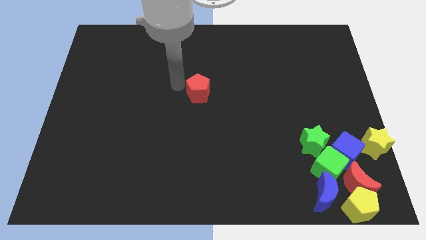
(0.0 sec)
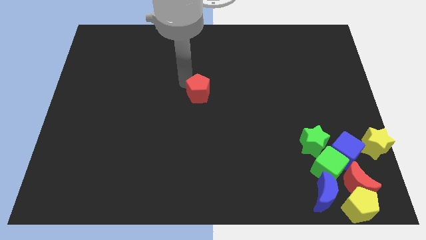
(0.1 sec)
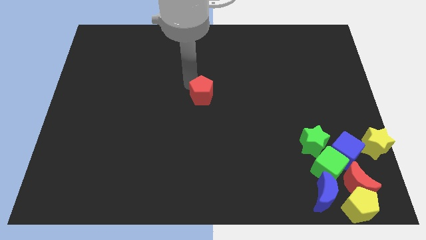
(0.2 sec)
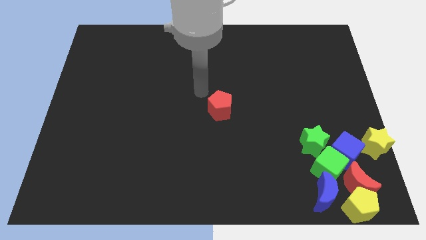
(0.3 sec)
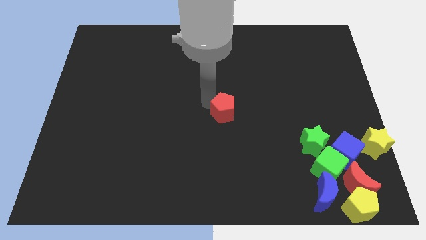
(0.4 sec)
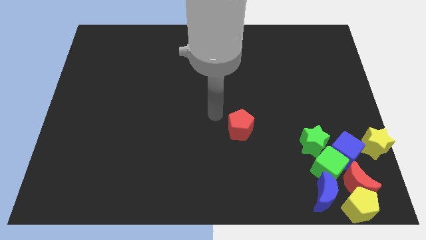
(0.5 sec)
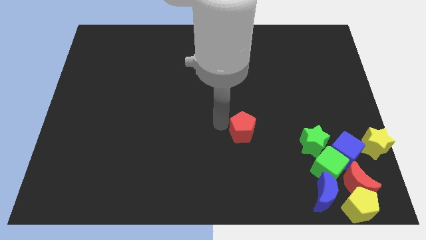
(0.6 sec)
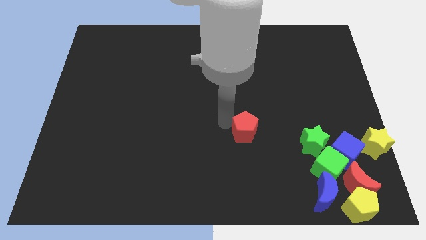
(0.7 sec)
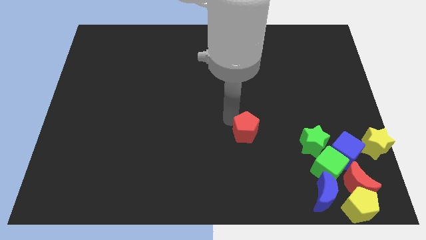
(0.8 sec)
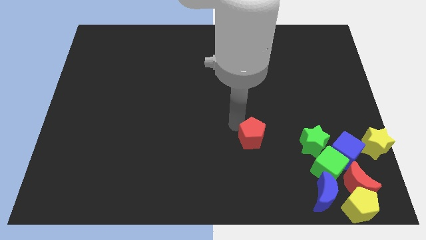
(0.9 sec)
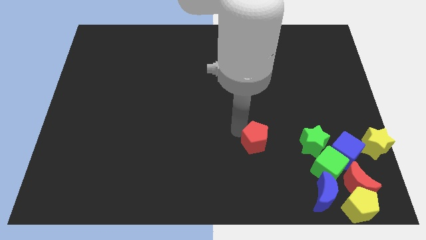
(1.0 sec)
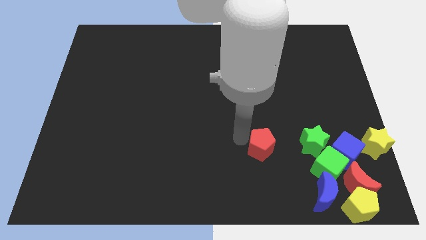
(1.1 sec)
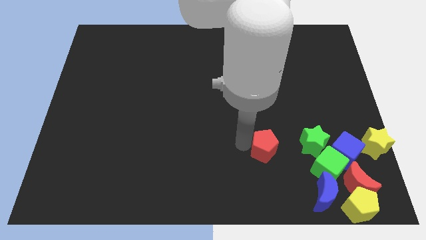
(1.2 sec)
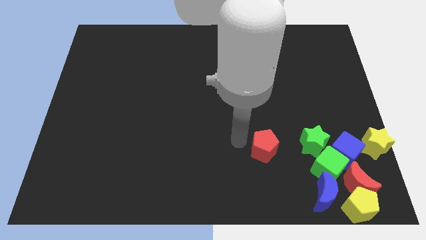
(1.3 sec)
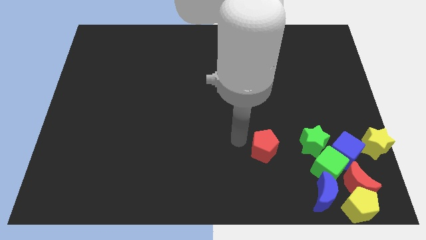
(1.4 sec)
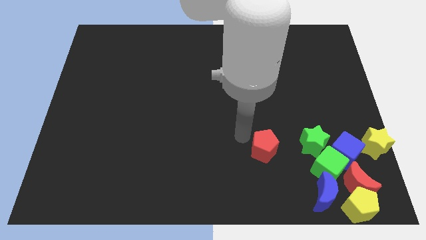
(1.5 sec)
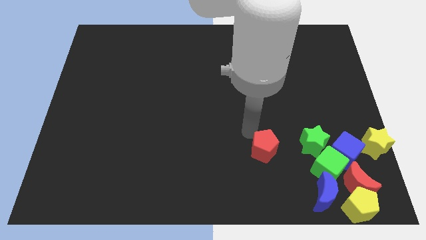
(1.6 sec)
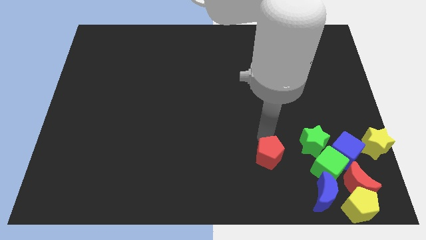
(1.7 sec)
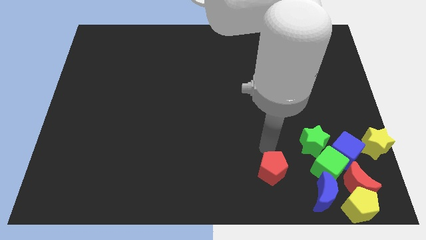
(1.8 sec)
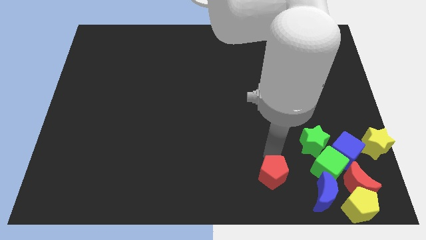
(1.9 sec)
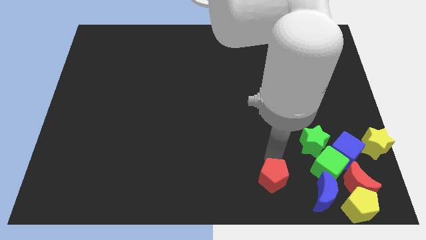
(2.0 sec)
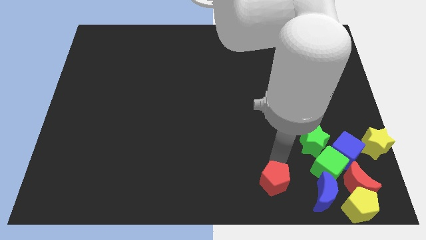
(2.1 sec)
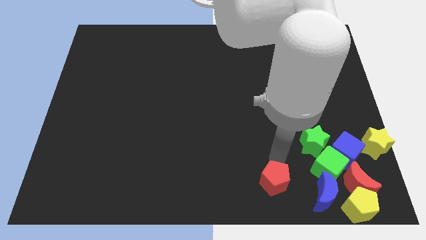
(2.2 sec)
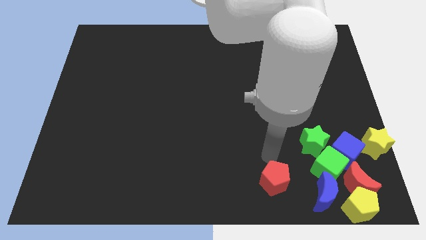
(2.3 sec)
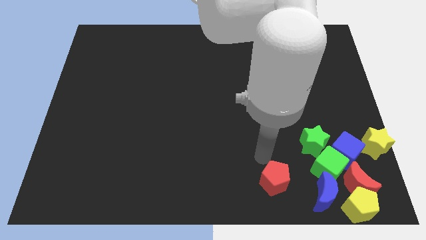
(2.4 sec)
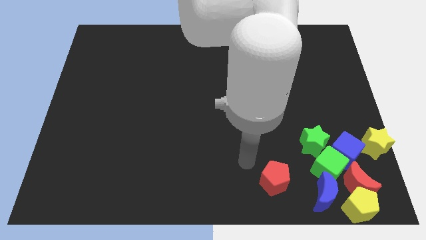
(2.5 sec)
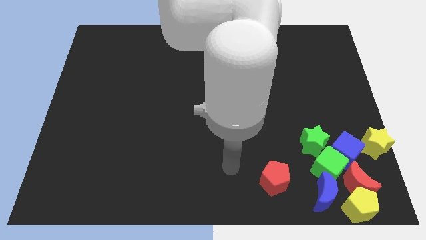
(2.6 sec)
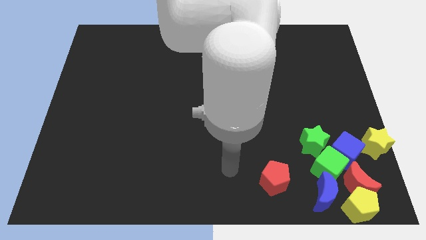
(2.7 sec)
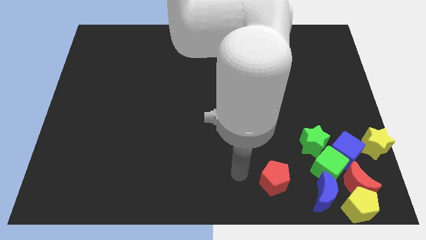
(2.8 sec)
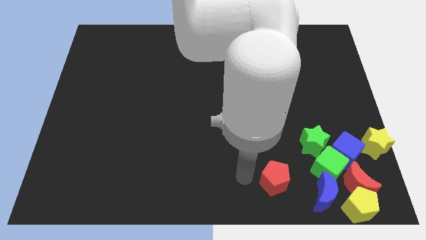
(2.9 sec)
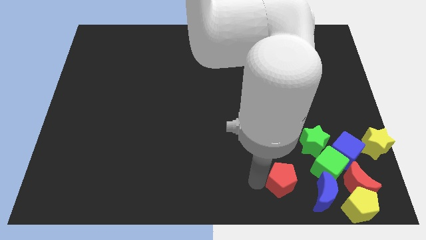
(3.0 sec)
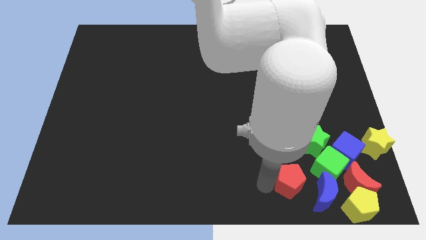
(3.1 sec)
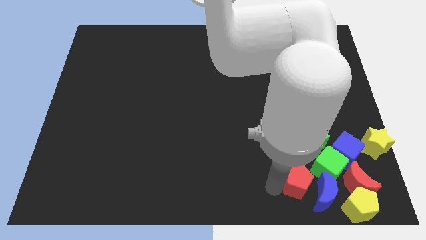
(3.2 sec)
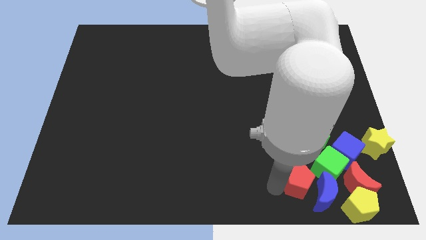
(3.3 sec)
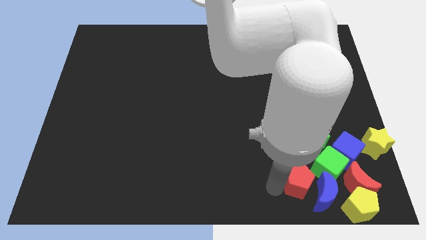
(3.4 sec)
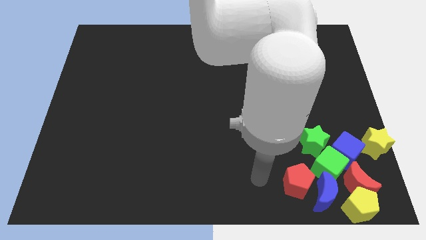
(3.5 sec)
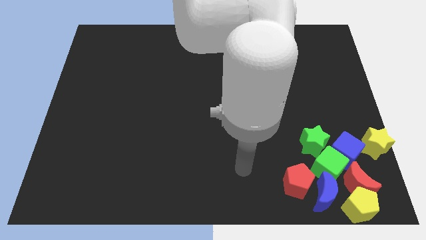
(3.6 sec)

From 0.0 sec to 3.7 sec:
move the red pentagon into the group of blocks

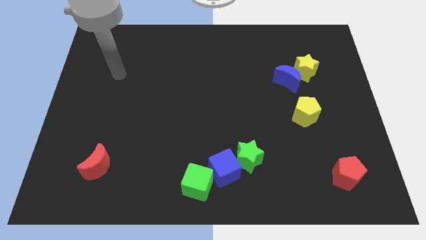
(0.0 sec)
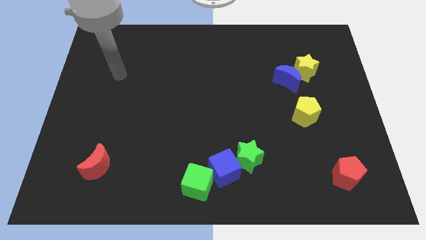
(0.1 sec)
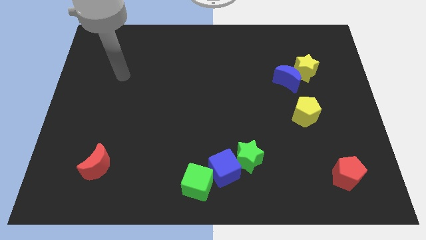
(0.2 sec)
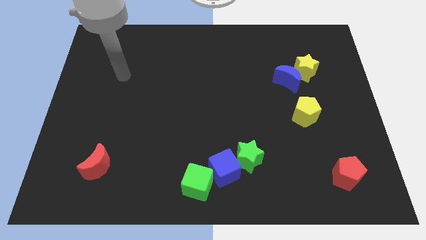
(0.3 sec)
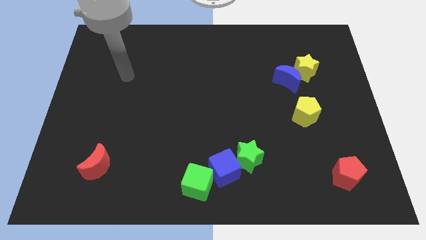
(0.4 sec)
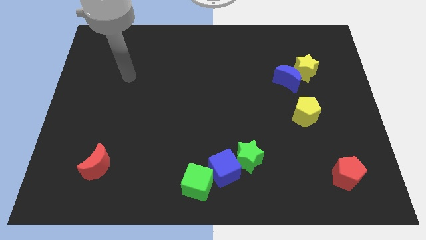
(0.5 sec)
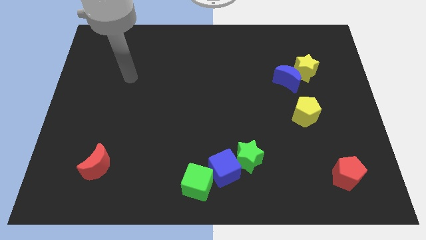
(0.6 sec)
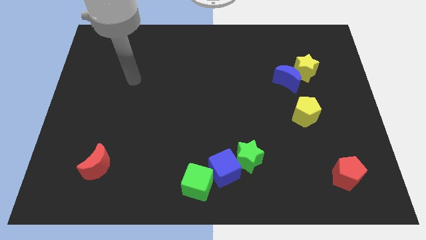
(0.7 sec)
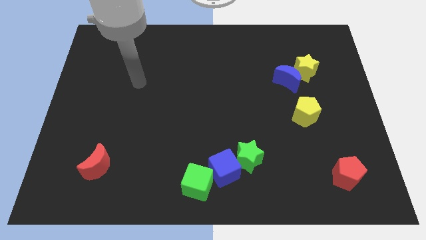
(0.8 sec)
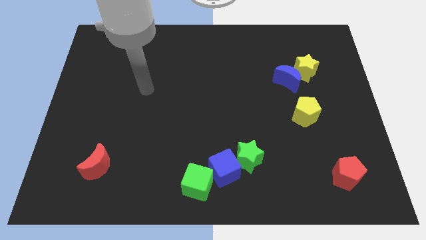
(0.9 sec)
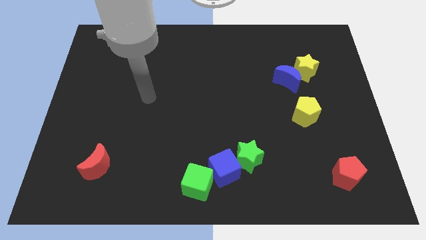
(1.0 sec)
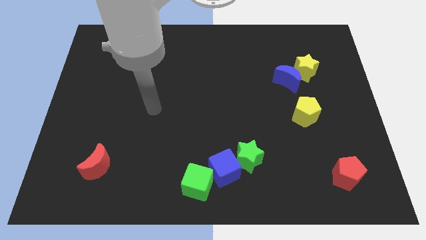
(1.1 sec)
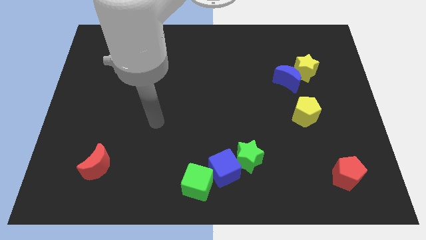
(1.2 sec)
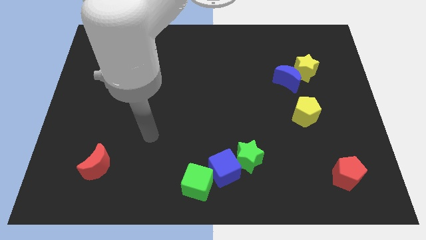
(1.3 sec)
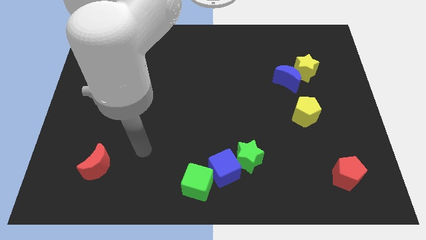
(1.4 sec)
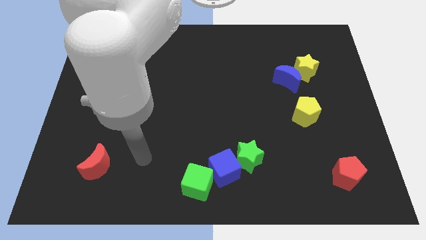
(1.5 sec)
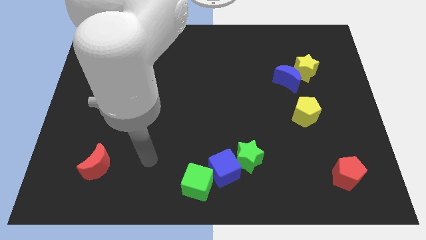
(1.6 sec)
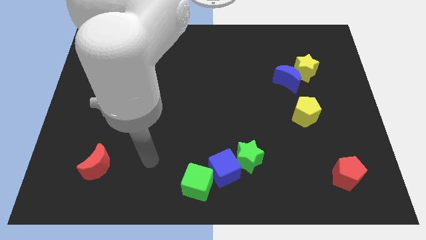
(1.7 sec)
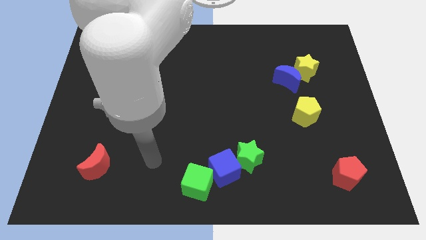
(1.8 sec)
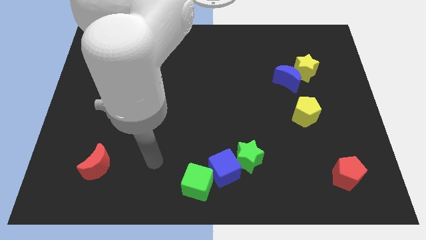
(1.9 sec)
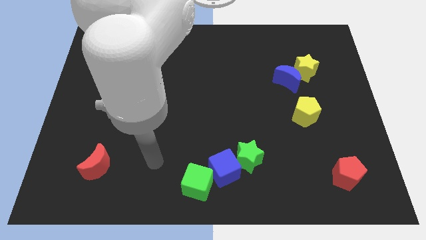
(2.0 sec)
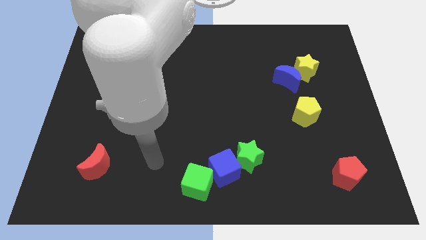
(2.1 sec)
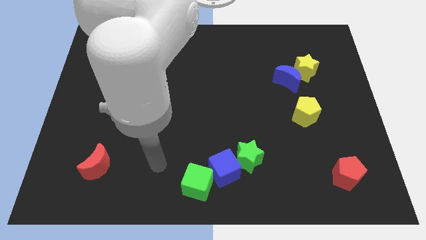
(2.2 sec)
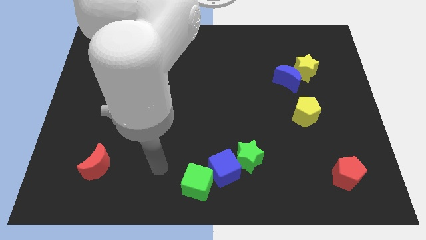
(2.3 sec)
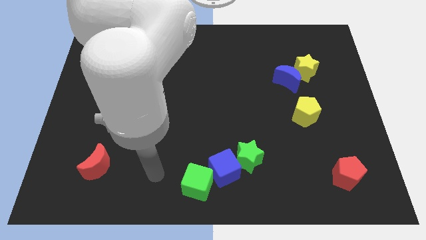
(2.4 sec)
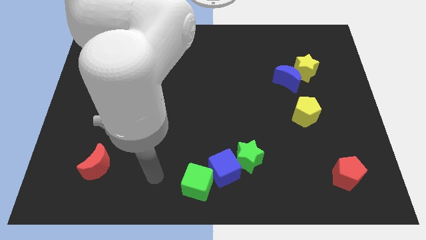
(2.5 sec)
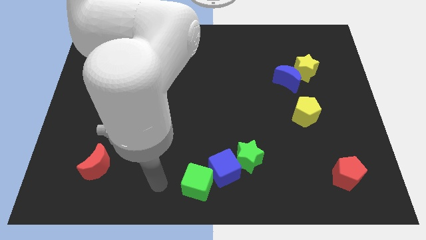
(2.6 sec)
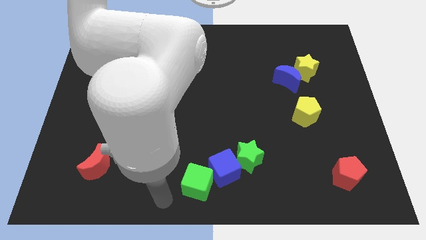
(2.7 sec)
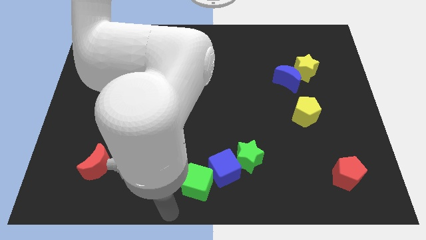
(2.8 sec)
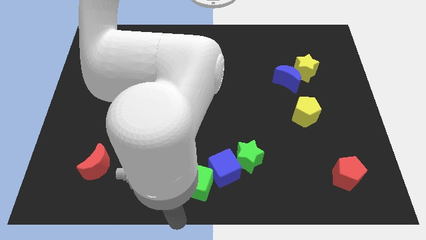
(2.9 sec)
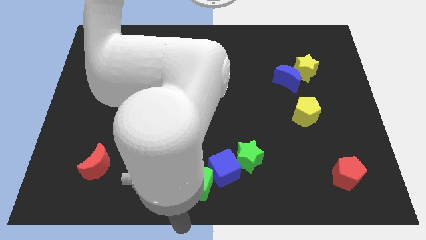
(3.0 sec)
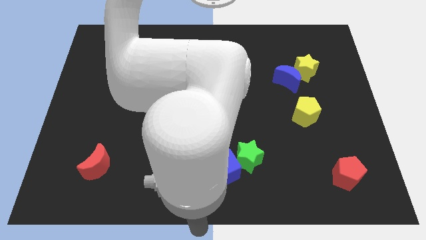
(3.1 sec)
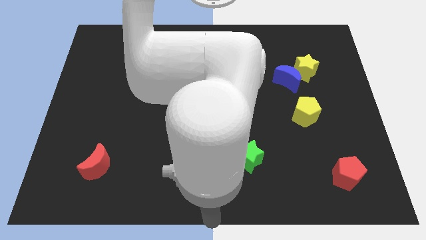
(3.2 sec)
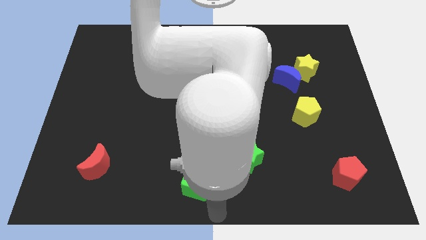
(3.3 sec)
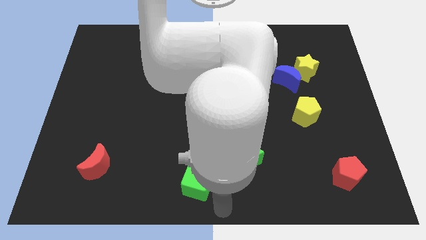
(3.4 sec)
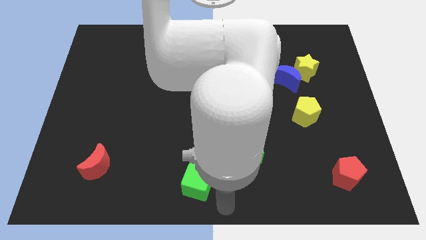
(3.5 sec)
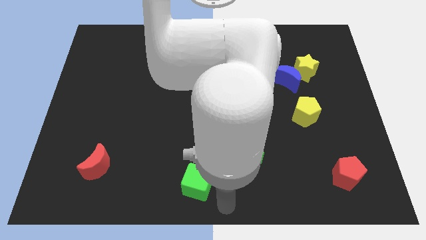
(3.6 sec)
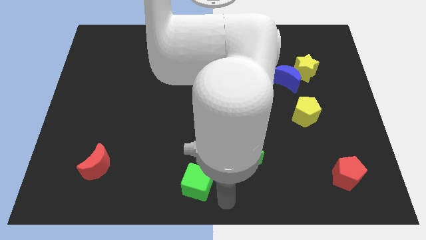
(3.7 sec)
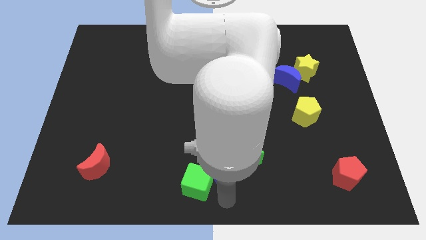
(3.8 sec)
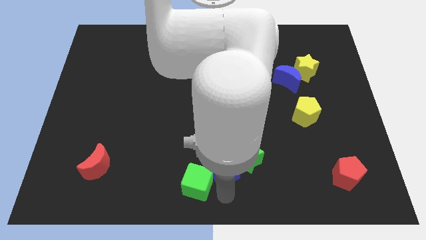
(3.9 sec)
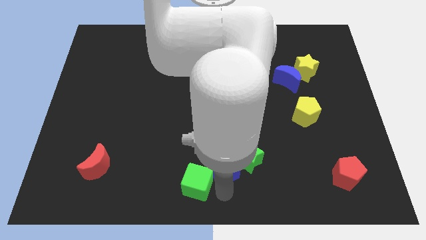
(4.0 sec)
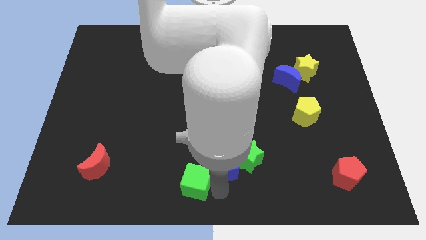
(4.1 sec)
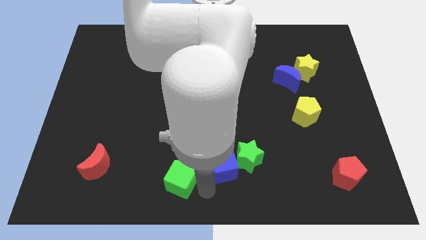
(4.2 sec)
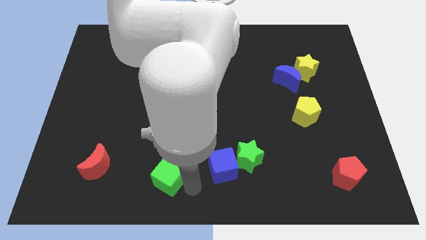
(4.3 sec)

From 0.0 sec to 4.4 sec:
push the green cube away from the blue cube

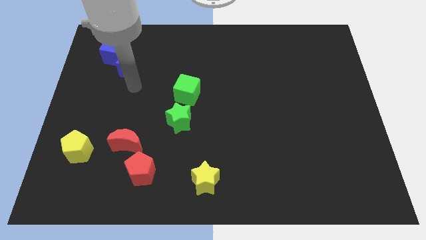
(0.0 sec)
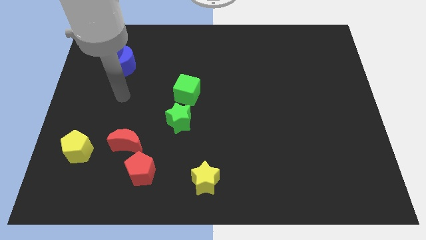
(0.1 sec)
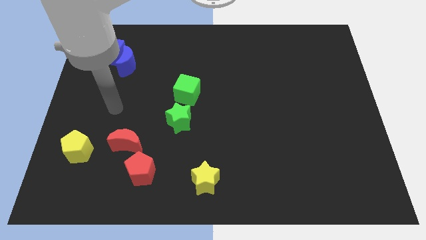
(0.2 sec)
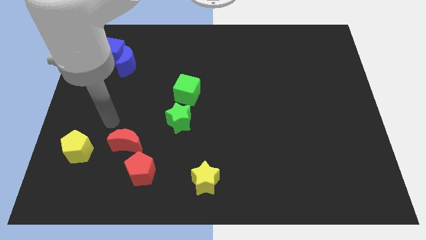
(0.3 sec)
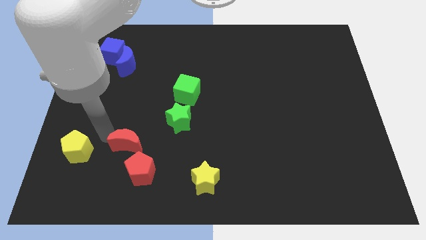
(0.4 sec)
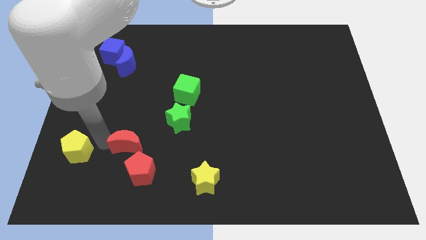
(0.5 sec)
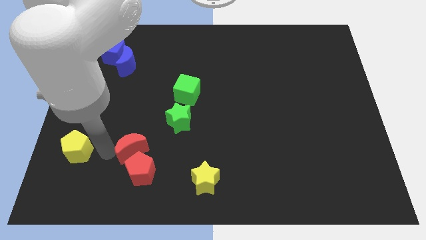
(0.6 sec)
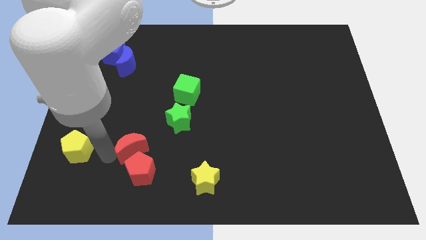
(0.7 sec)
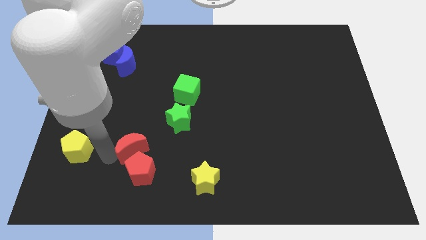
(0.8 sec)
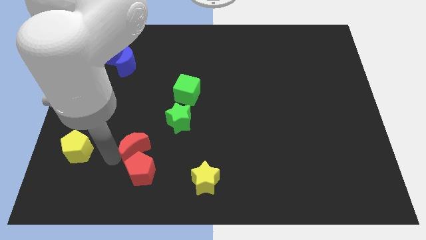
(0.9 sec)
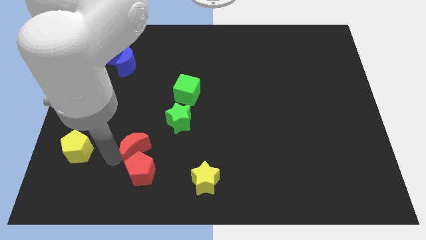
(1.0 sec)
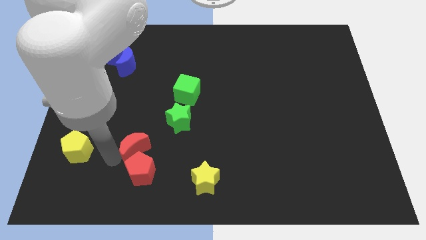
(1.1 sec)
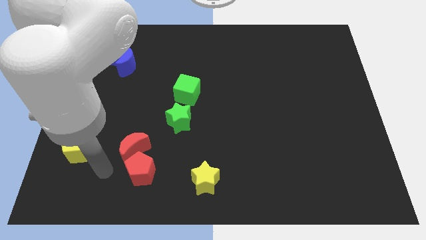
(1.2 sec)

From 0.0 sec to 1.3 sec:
push the red crescent towards bottom to the vertical of red pentagon
